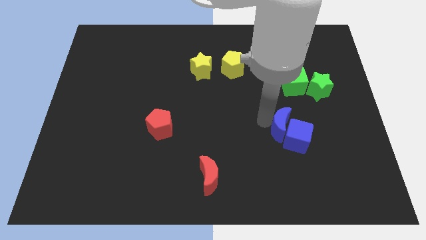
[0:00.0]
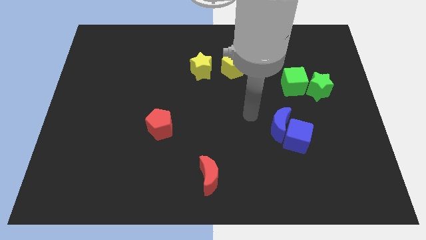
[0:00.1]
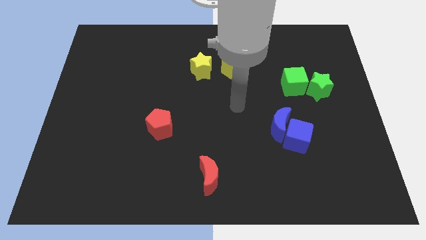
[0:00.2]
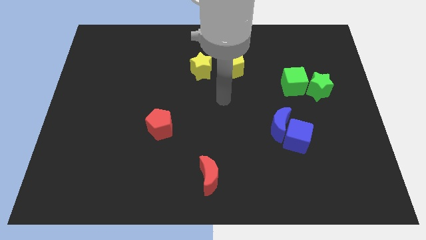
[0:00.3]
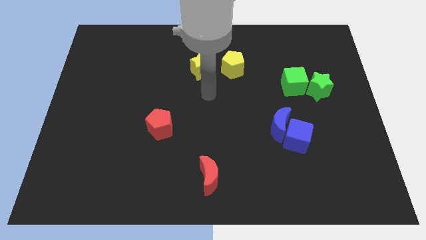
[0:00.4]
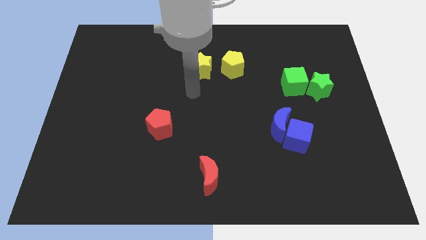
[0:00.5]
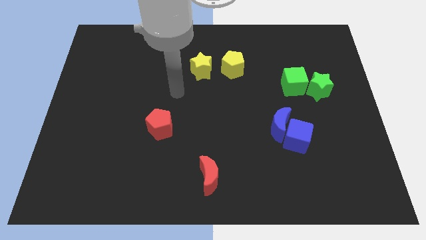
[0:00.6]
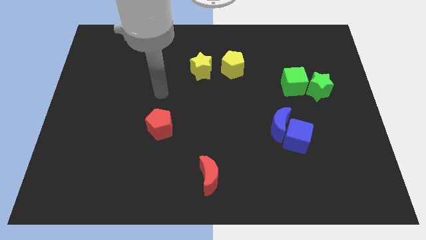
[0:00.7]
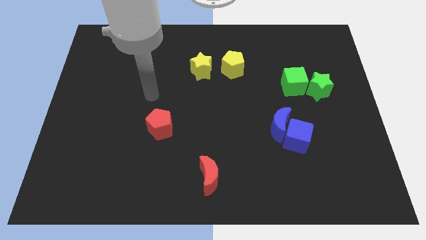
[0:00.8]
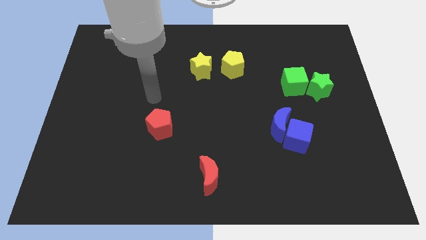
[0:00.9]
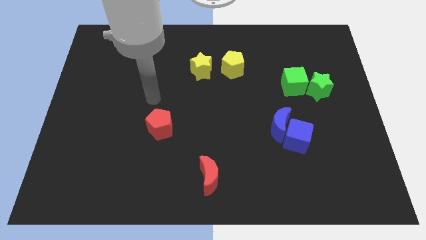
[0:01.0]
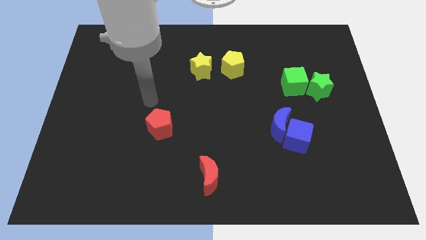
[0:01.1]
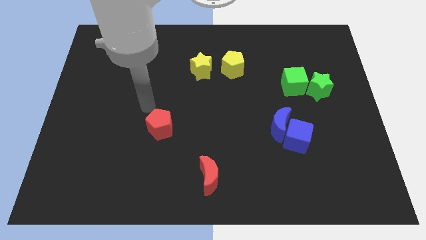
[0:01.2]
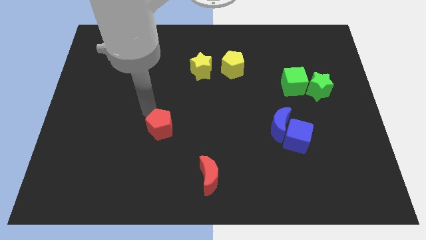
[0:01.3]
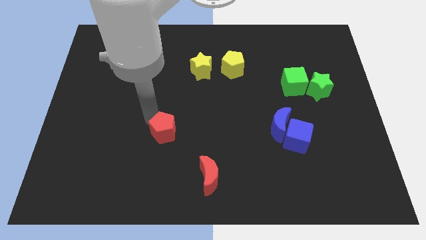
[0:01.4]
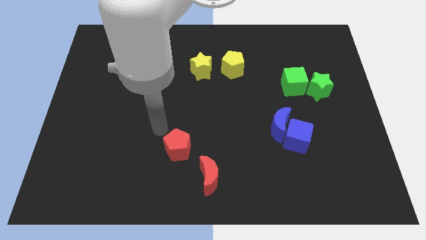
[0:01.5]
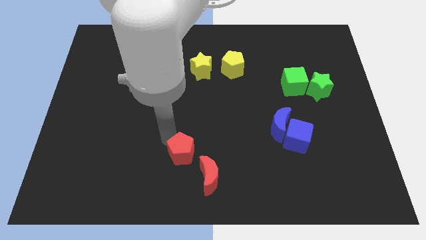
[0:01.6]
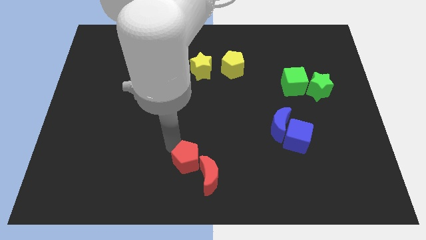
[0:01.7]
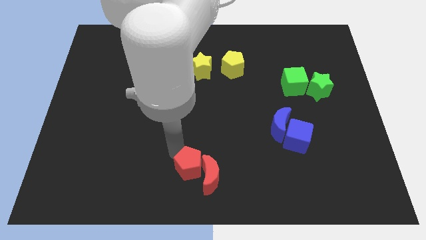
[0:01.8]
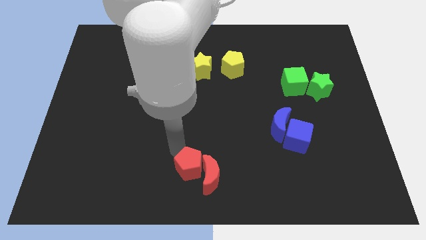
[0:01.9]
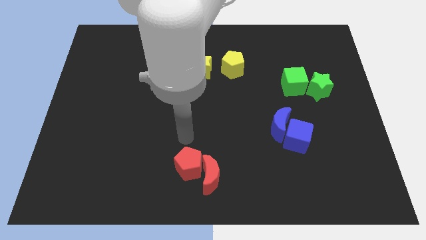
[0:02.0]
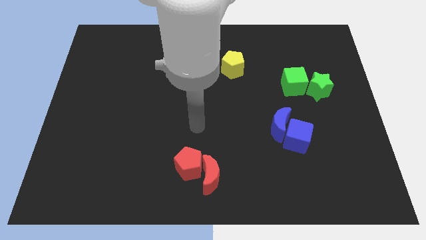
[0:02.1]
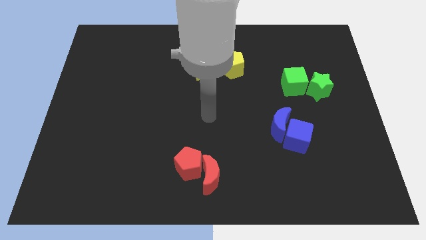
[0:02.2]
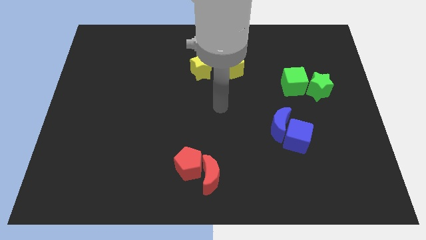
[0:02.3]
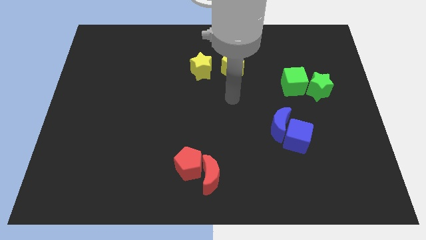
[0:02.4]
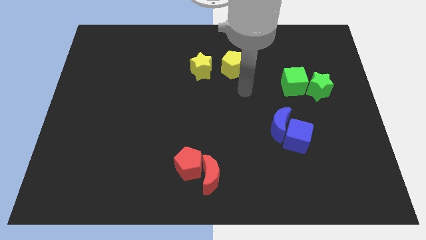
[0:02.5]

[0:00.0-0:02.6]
place the red pentagon and red moon together at the bottom side of the board

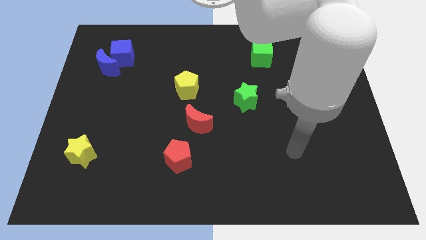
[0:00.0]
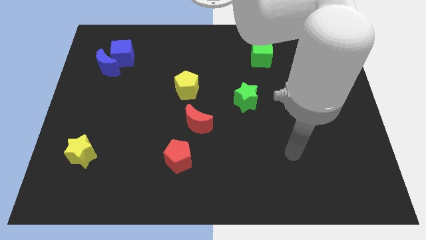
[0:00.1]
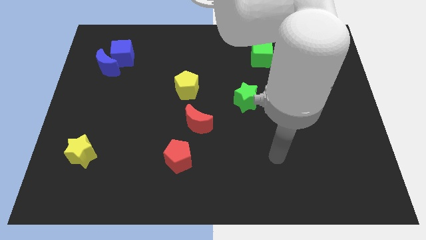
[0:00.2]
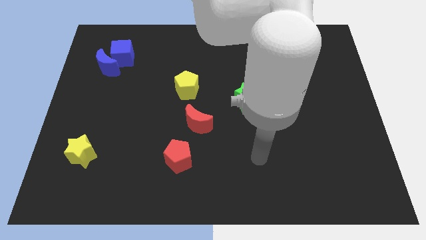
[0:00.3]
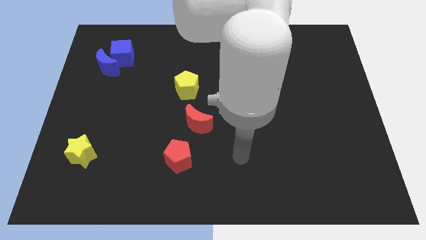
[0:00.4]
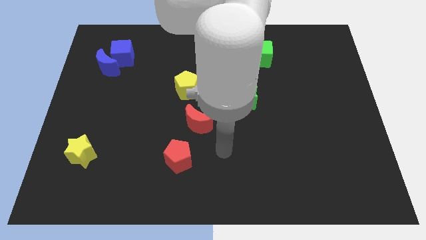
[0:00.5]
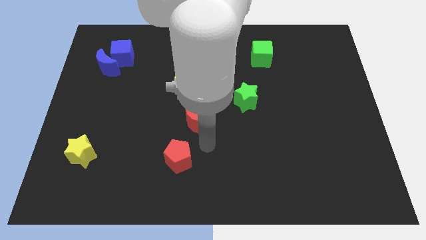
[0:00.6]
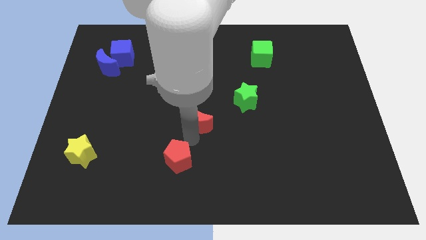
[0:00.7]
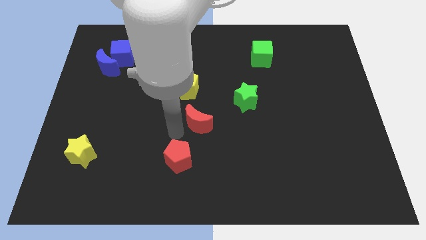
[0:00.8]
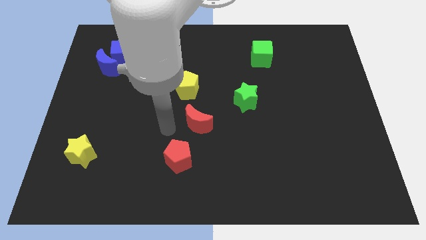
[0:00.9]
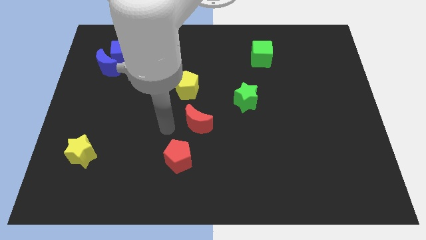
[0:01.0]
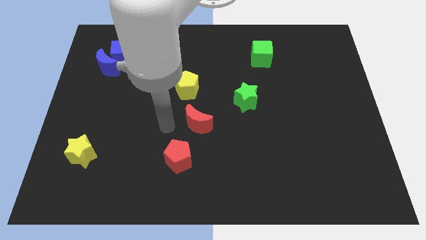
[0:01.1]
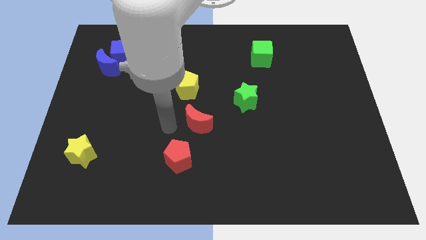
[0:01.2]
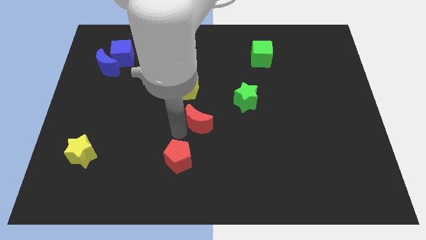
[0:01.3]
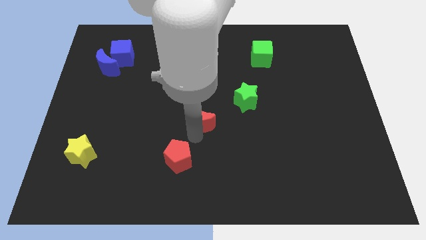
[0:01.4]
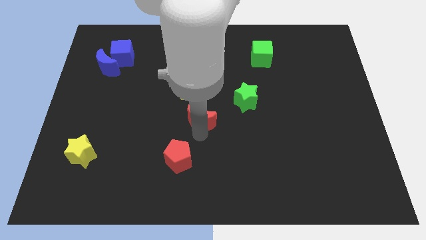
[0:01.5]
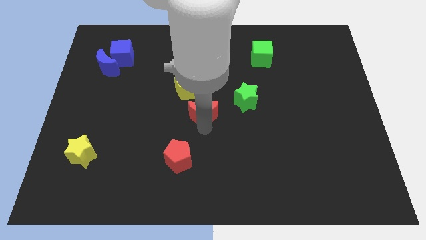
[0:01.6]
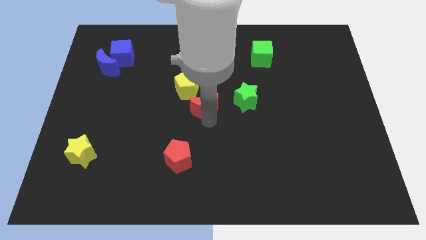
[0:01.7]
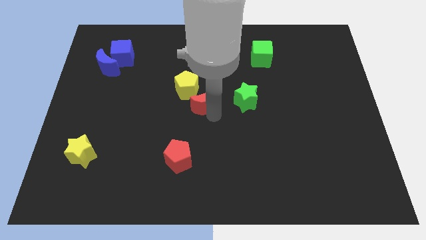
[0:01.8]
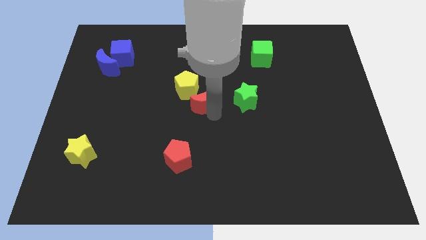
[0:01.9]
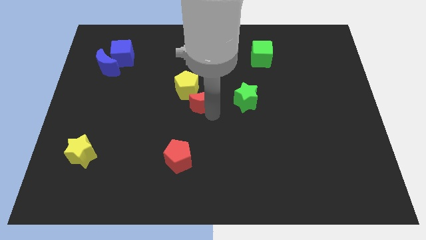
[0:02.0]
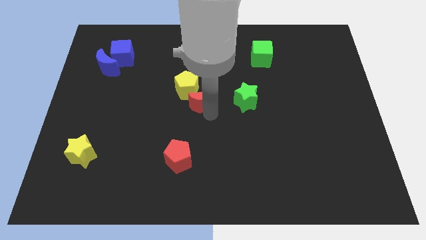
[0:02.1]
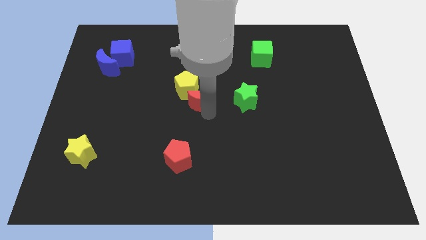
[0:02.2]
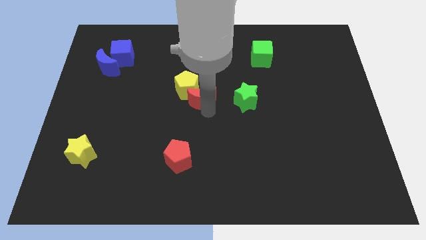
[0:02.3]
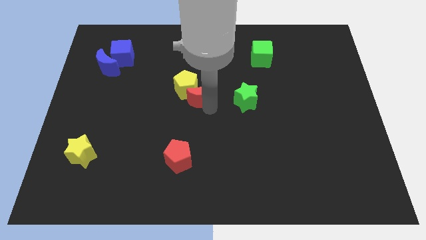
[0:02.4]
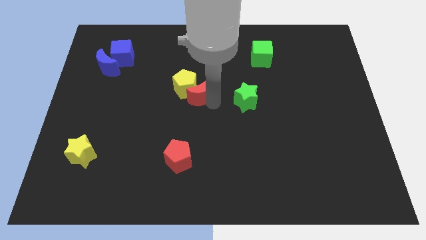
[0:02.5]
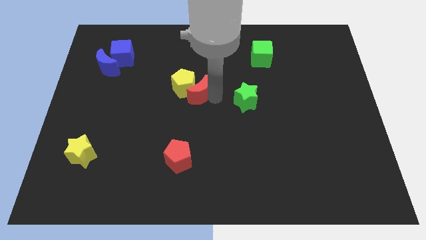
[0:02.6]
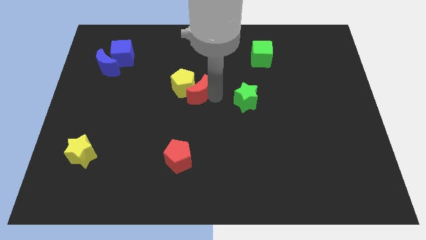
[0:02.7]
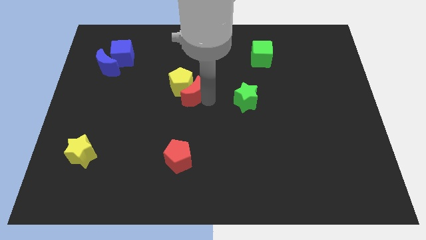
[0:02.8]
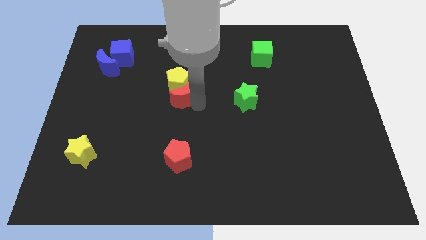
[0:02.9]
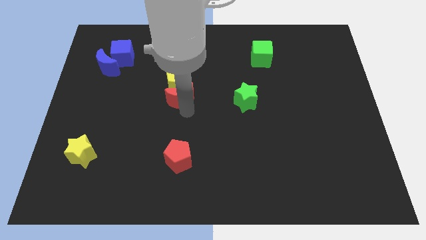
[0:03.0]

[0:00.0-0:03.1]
move red moon close to the yellow pentagon

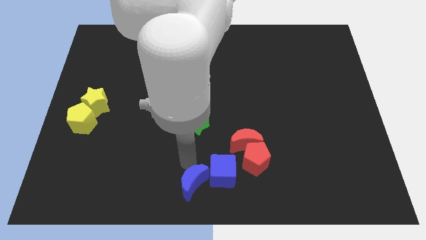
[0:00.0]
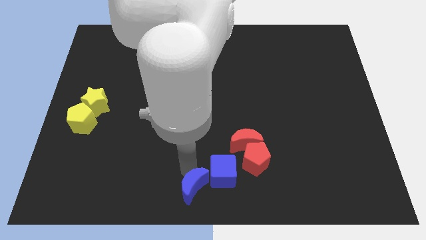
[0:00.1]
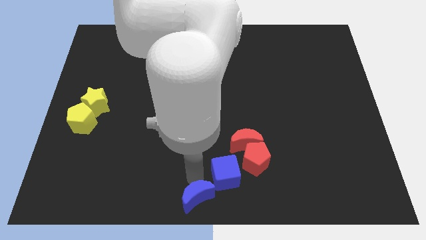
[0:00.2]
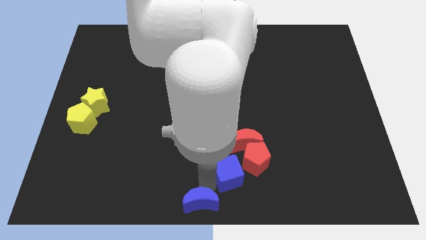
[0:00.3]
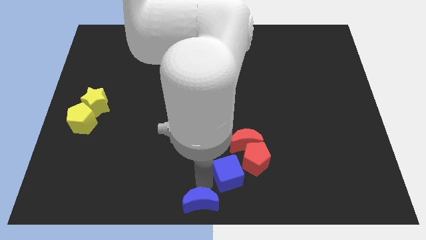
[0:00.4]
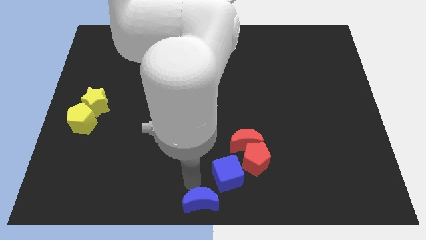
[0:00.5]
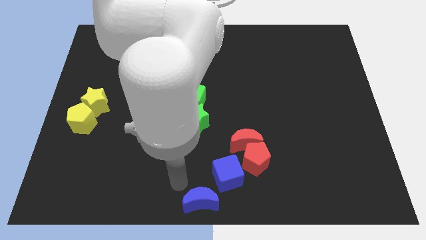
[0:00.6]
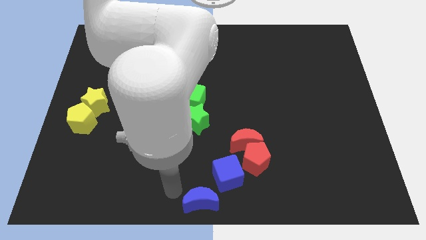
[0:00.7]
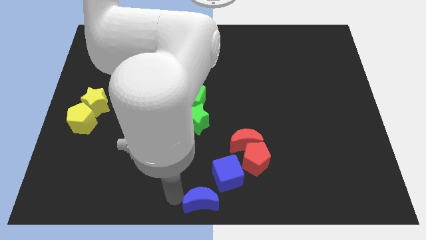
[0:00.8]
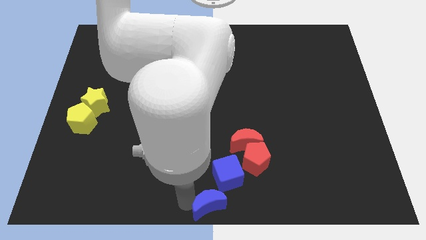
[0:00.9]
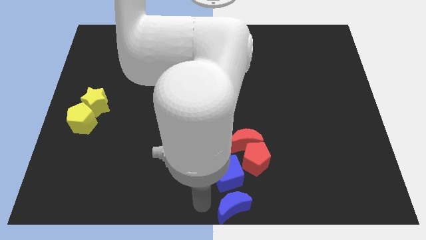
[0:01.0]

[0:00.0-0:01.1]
push blue moon to the bottom center

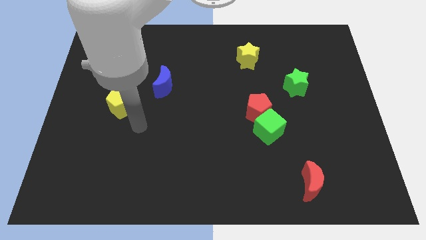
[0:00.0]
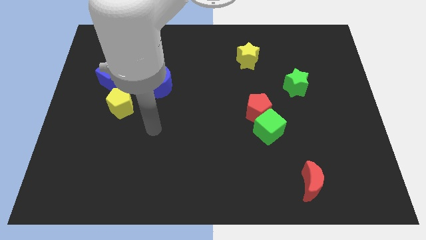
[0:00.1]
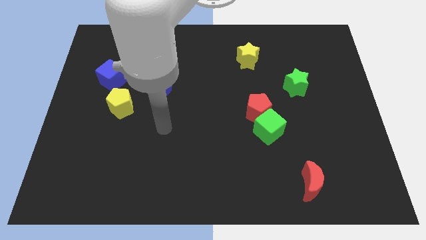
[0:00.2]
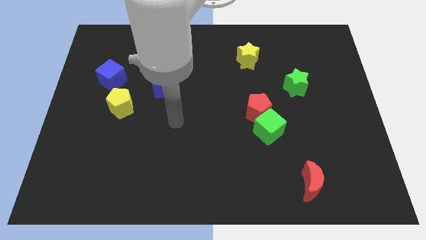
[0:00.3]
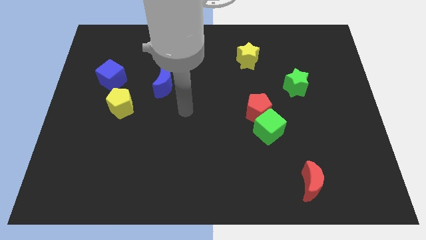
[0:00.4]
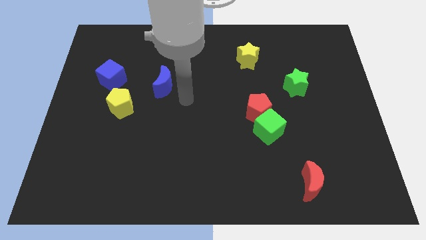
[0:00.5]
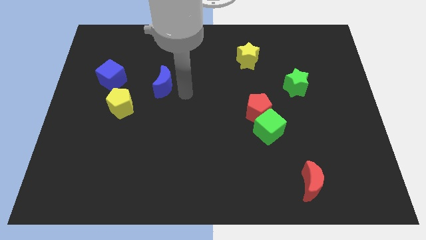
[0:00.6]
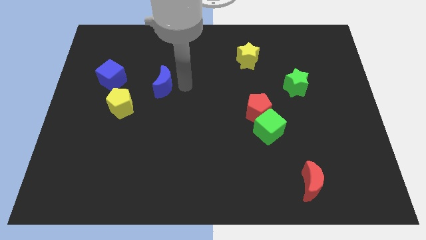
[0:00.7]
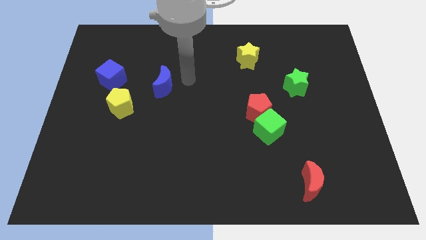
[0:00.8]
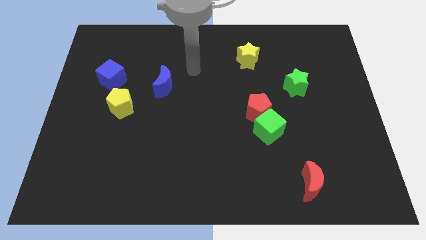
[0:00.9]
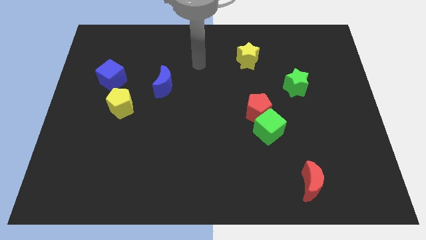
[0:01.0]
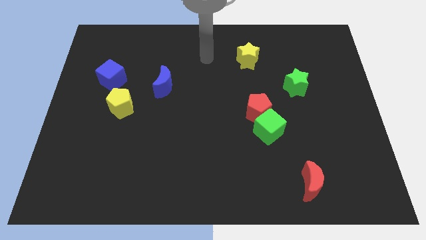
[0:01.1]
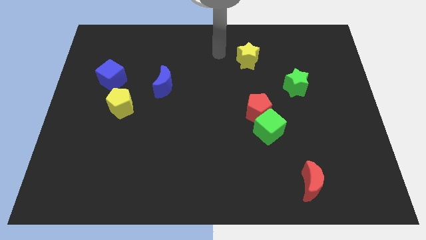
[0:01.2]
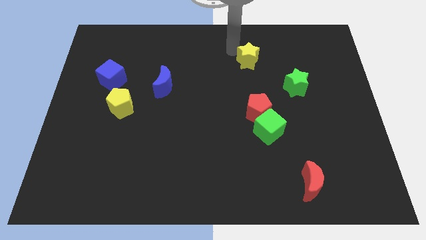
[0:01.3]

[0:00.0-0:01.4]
move your arm towards the yellow star

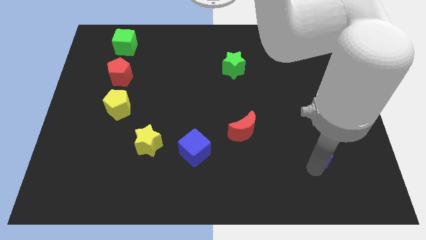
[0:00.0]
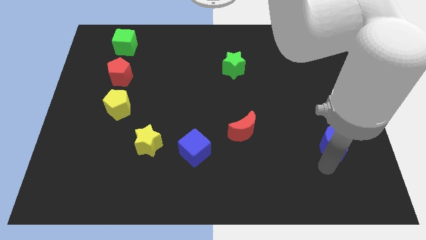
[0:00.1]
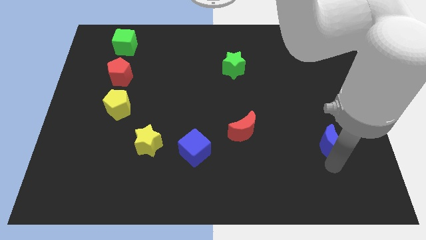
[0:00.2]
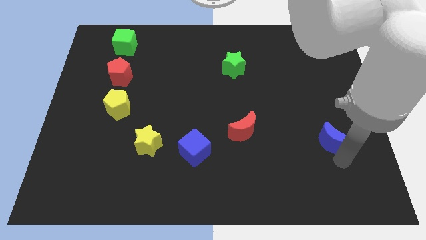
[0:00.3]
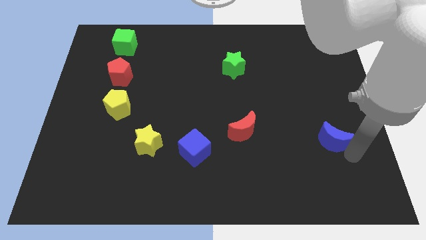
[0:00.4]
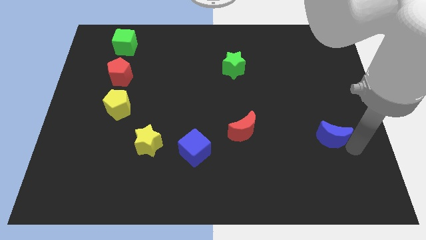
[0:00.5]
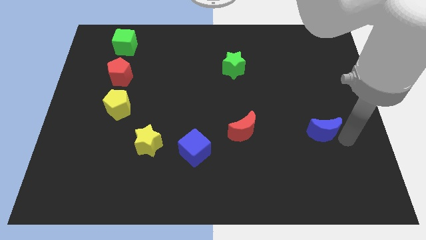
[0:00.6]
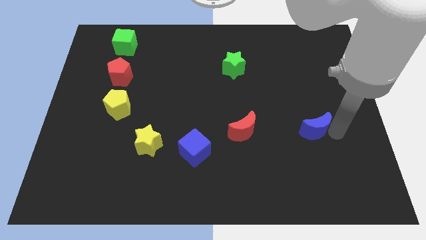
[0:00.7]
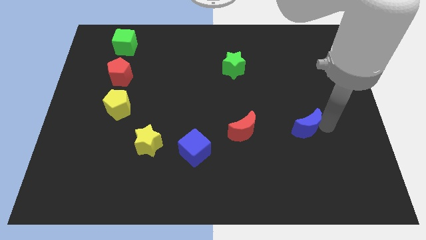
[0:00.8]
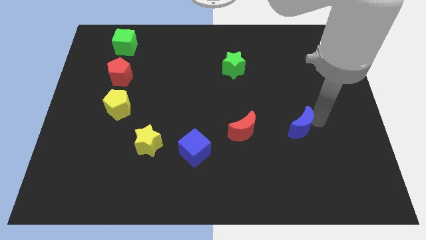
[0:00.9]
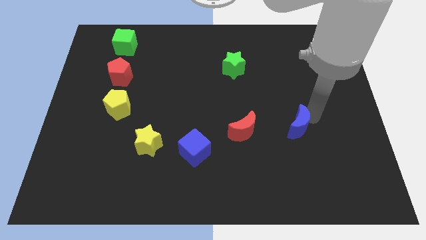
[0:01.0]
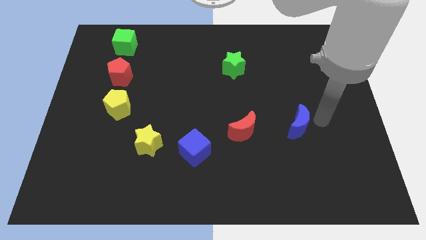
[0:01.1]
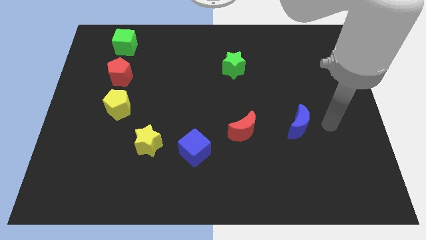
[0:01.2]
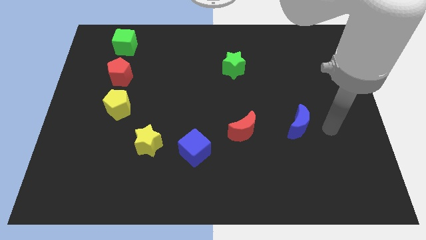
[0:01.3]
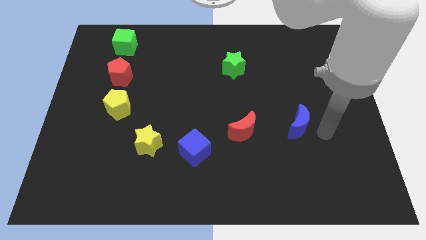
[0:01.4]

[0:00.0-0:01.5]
place the blue crescent to the right of the red crescent
